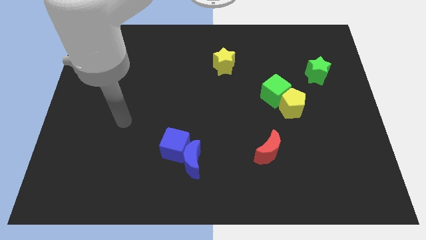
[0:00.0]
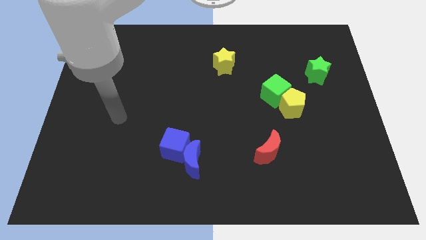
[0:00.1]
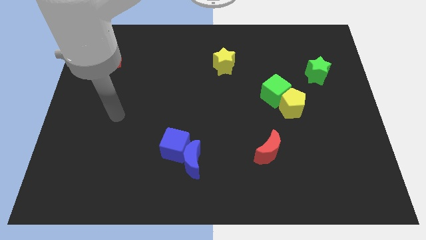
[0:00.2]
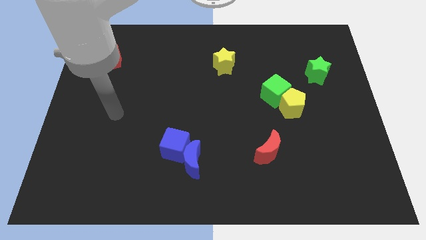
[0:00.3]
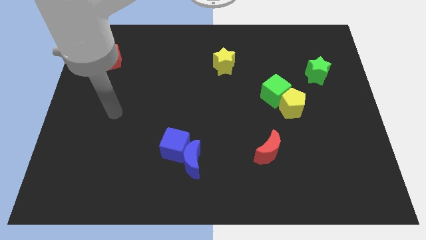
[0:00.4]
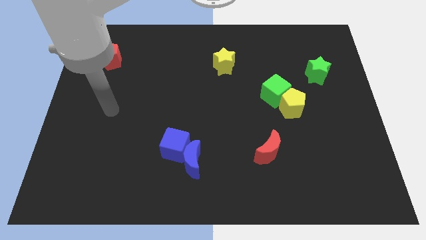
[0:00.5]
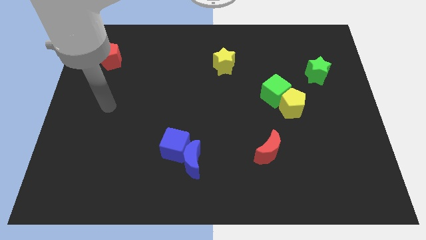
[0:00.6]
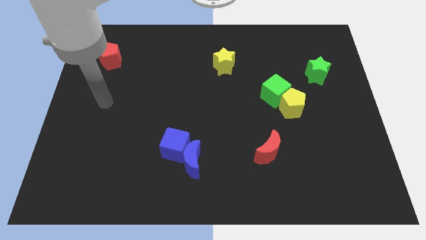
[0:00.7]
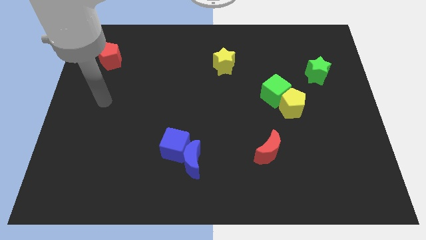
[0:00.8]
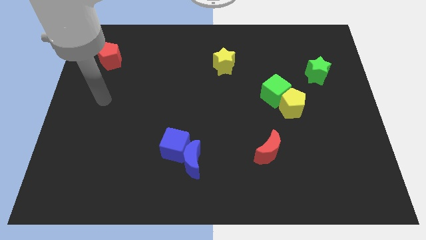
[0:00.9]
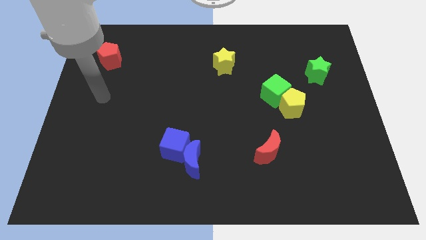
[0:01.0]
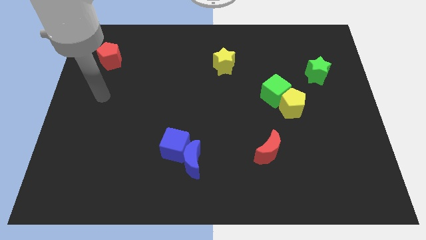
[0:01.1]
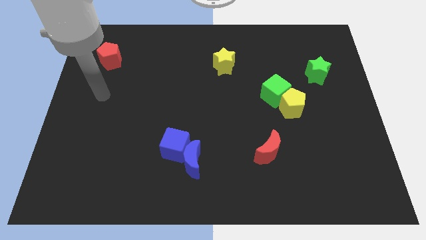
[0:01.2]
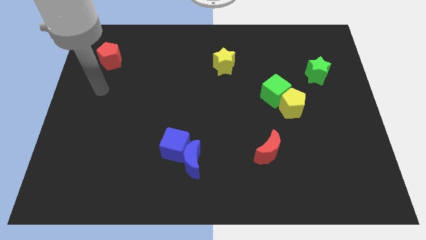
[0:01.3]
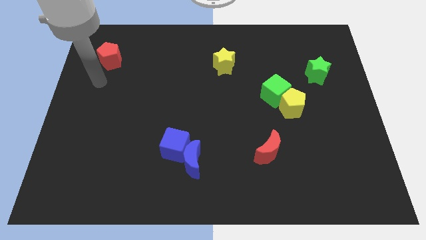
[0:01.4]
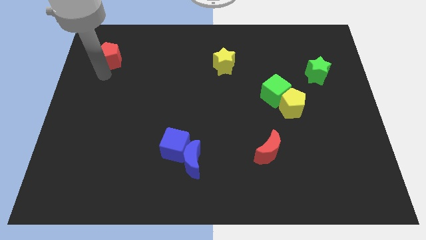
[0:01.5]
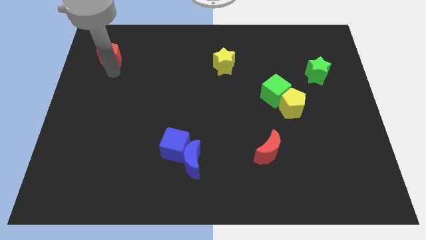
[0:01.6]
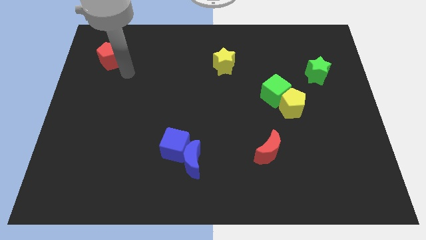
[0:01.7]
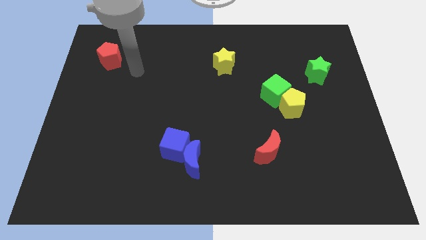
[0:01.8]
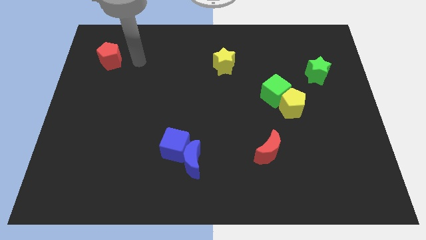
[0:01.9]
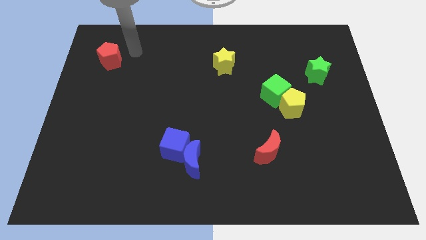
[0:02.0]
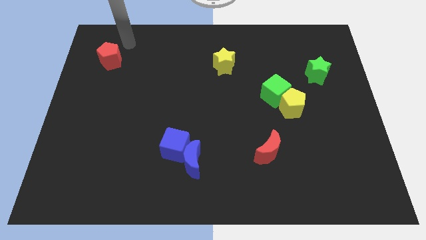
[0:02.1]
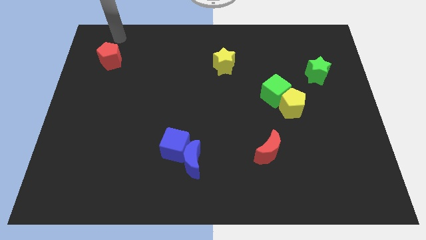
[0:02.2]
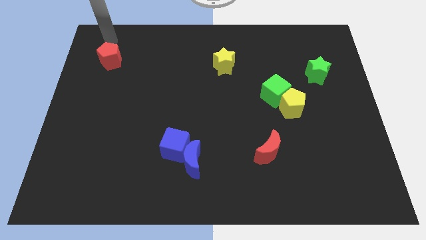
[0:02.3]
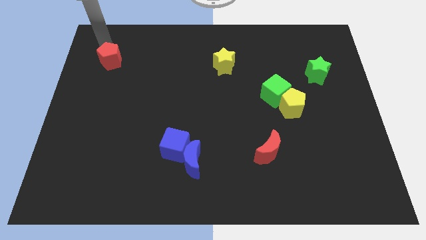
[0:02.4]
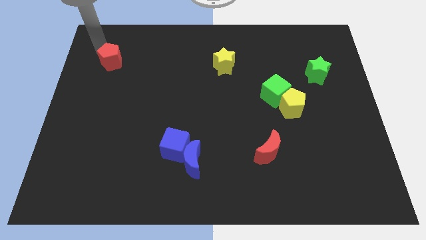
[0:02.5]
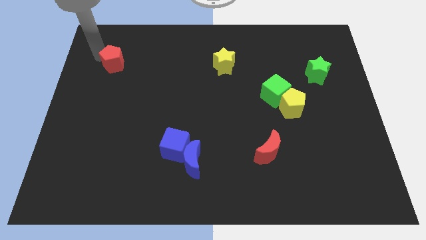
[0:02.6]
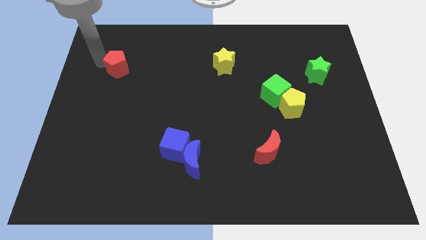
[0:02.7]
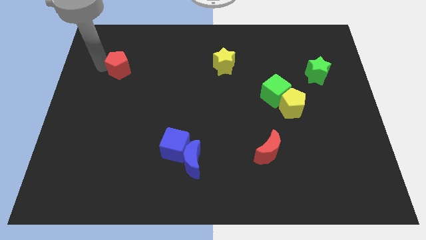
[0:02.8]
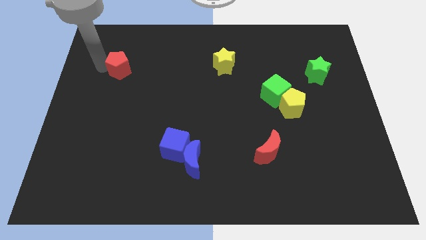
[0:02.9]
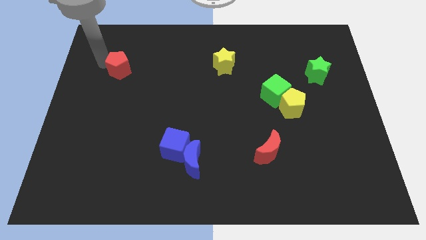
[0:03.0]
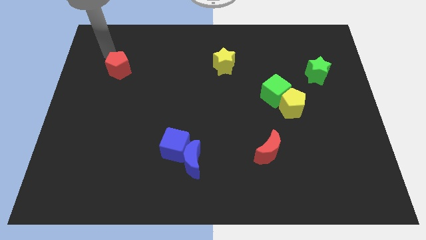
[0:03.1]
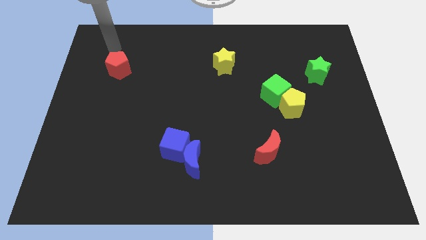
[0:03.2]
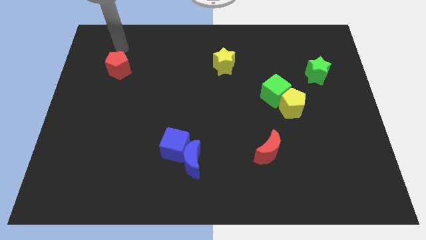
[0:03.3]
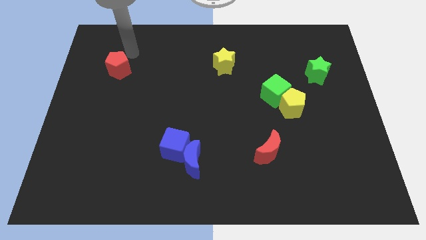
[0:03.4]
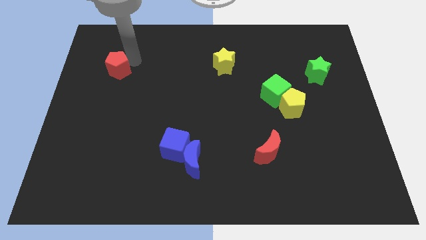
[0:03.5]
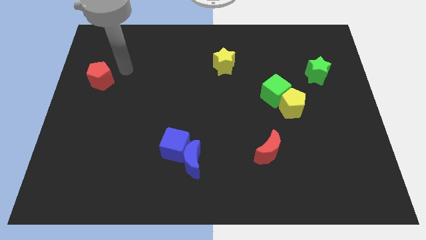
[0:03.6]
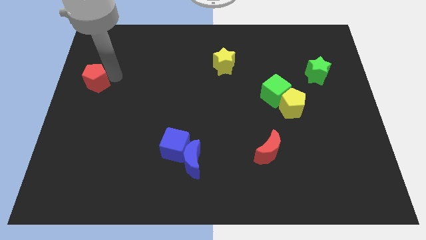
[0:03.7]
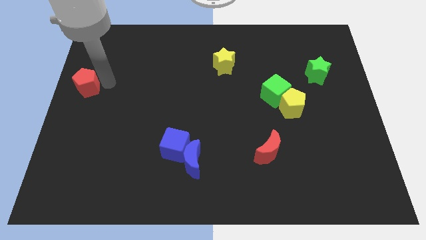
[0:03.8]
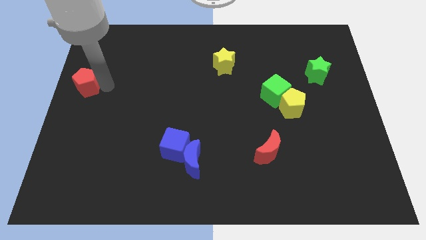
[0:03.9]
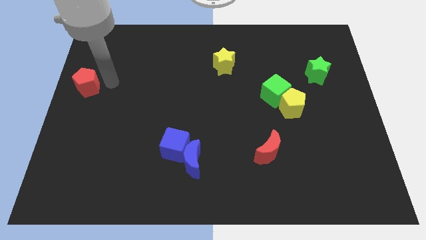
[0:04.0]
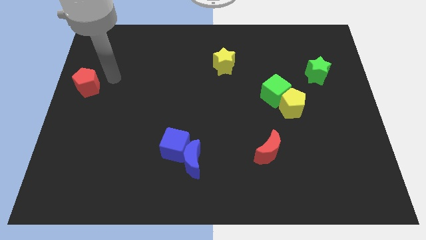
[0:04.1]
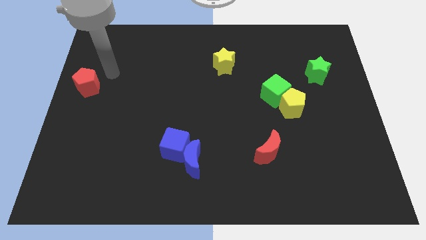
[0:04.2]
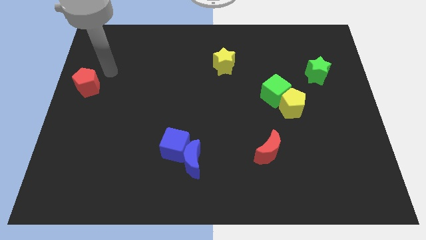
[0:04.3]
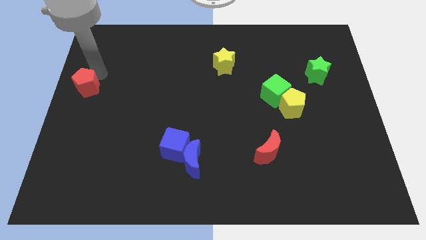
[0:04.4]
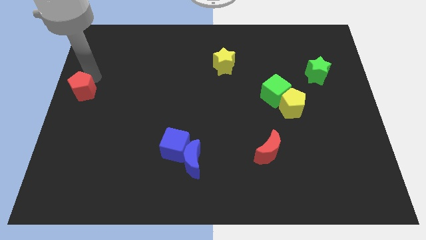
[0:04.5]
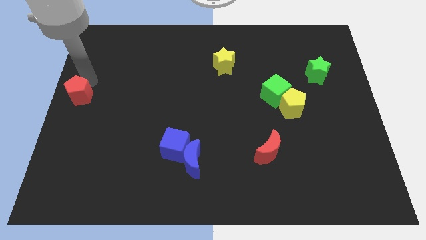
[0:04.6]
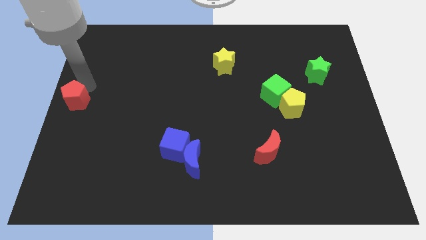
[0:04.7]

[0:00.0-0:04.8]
push the red pentagon to the left side of the board

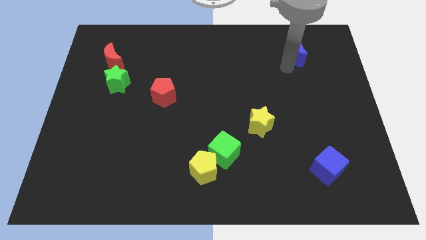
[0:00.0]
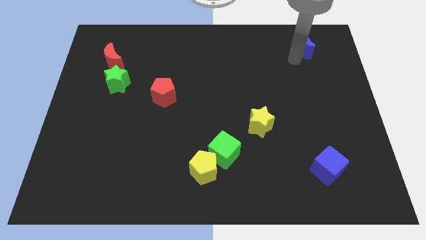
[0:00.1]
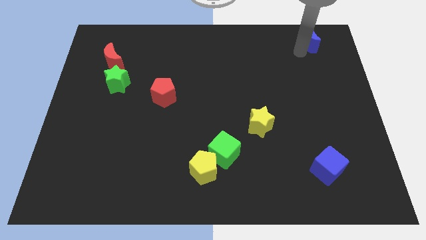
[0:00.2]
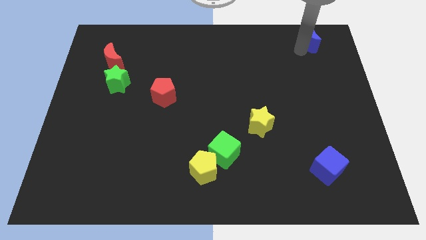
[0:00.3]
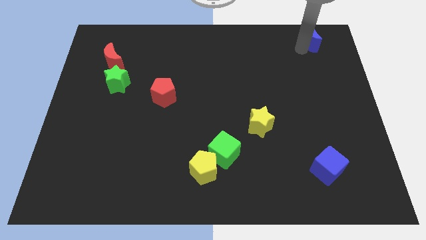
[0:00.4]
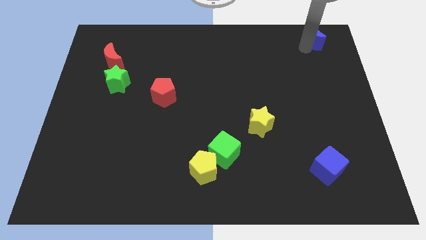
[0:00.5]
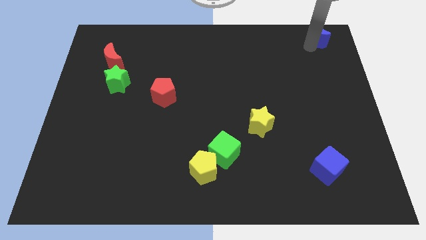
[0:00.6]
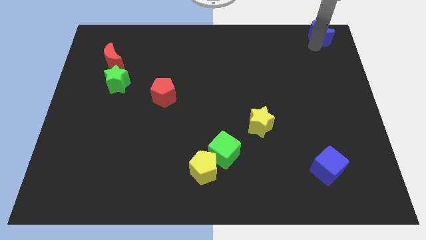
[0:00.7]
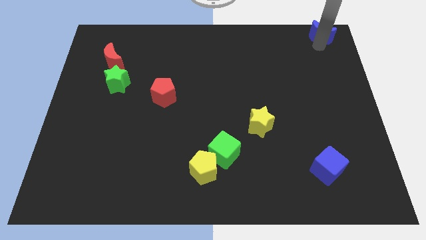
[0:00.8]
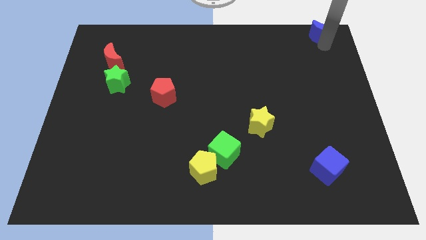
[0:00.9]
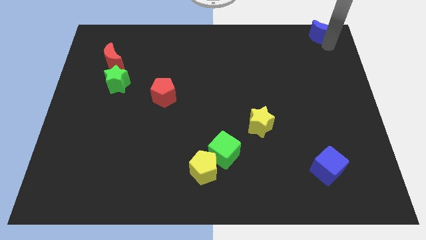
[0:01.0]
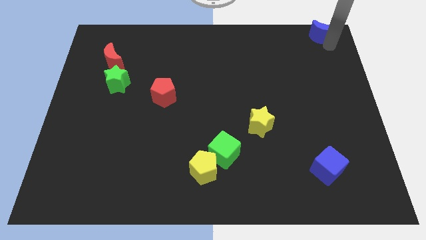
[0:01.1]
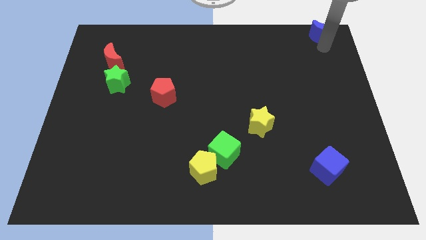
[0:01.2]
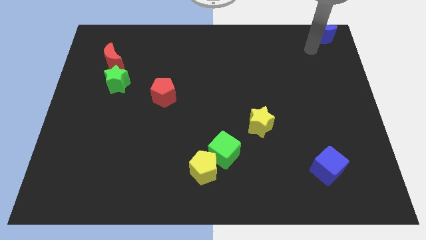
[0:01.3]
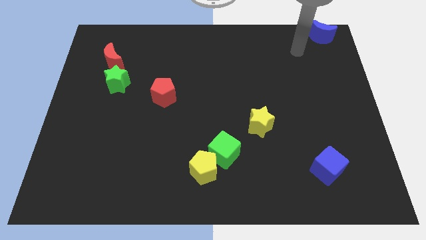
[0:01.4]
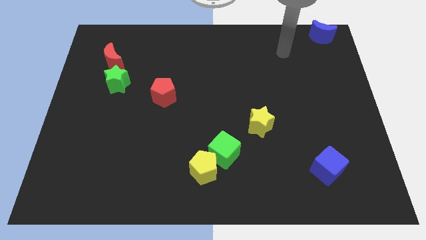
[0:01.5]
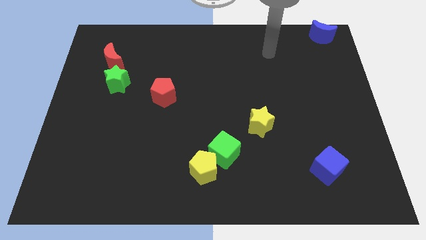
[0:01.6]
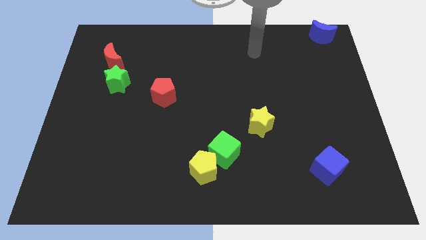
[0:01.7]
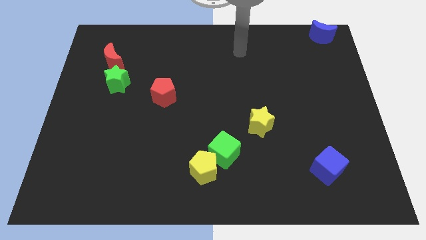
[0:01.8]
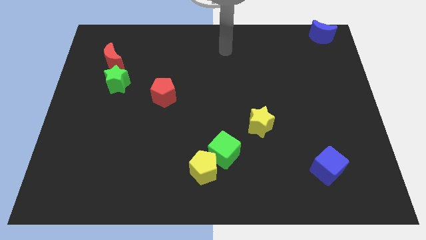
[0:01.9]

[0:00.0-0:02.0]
slide the blue crescent slightly towards the top right corner of the board

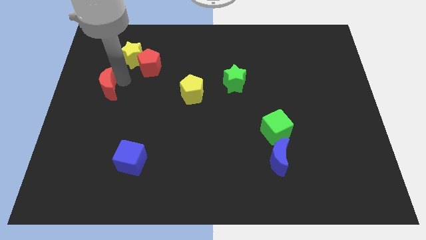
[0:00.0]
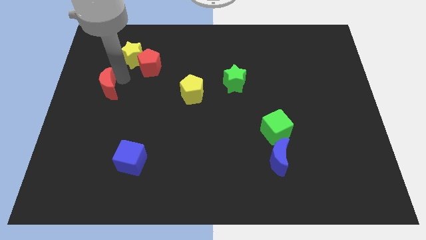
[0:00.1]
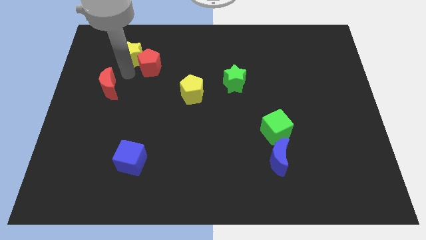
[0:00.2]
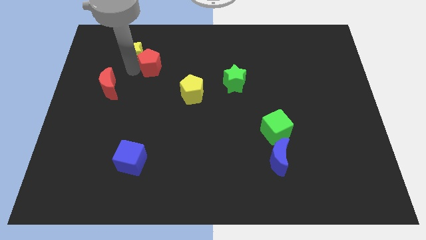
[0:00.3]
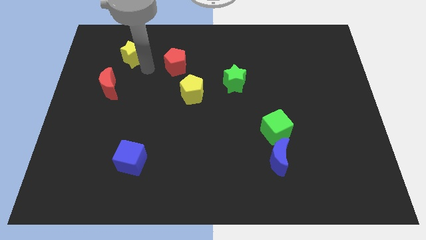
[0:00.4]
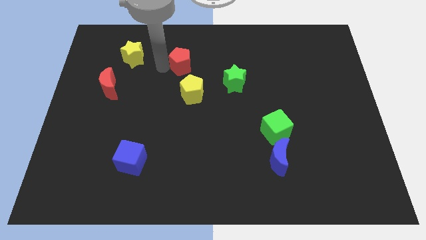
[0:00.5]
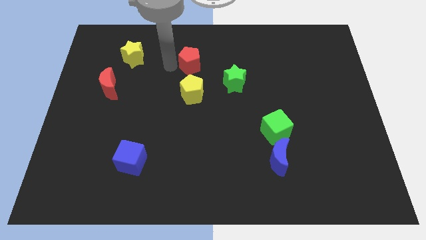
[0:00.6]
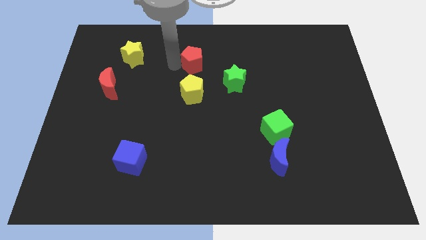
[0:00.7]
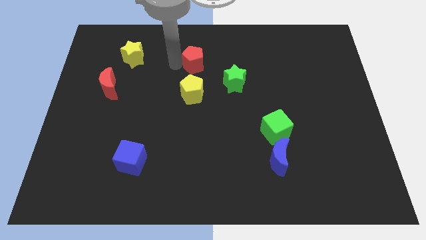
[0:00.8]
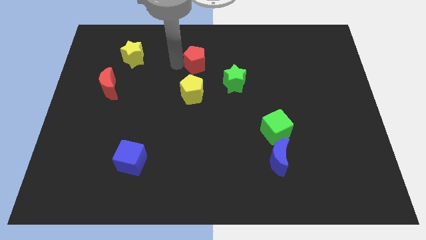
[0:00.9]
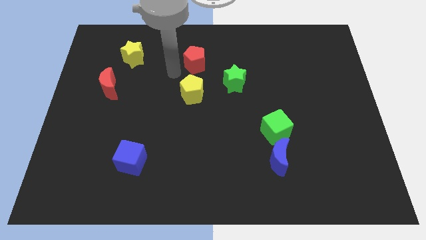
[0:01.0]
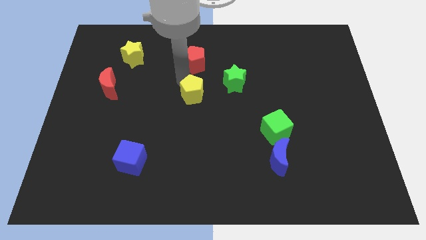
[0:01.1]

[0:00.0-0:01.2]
slide red pentagon to the top of yellow pentagon

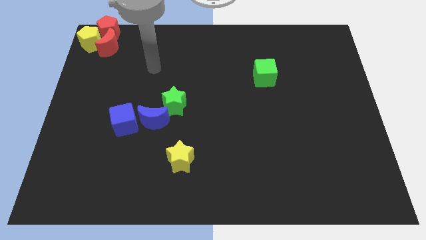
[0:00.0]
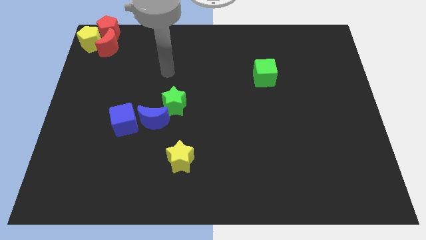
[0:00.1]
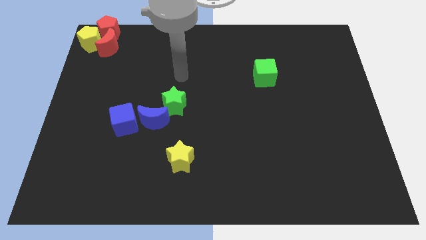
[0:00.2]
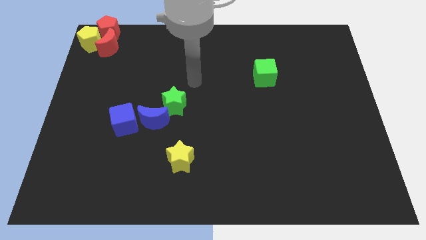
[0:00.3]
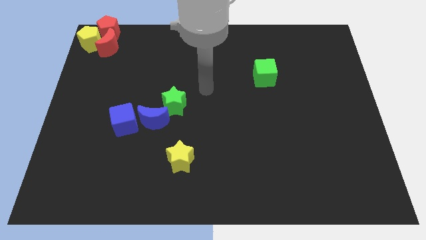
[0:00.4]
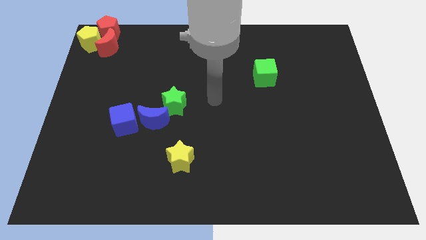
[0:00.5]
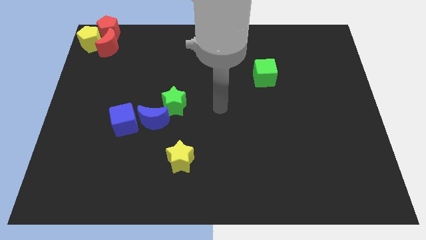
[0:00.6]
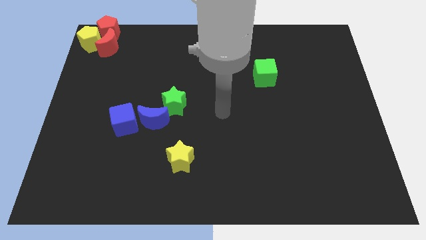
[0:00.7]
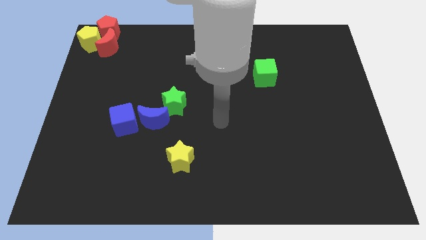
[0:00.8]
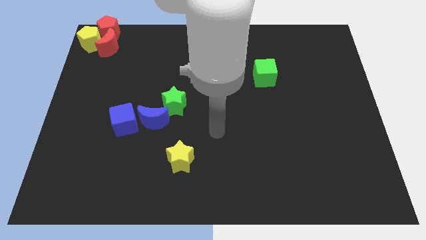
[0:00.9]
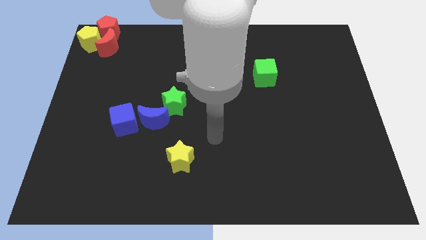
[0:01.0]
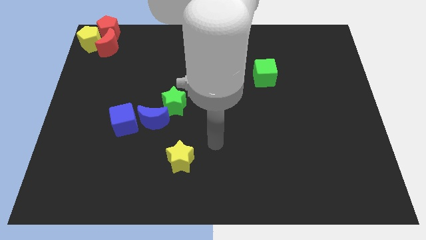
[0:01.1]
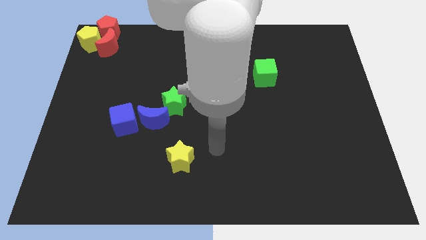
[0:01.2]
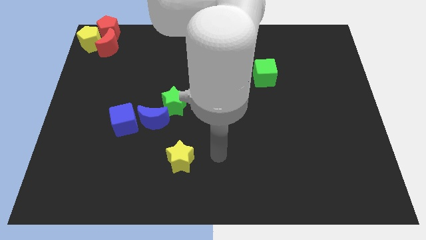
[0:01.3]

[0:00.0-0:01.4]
go and point your arm at the right of the yellow star
